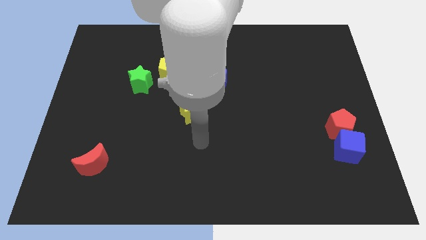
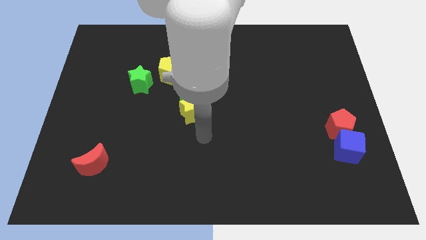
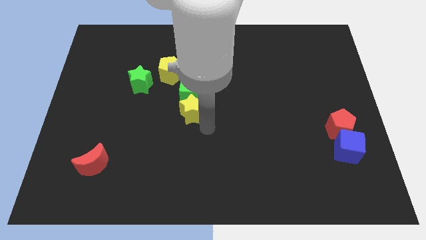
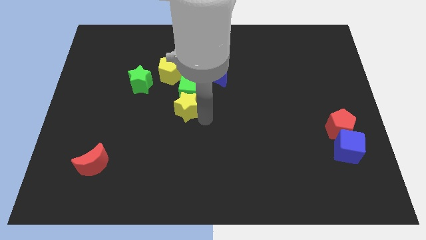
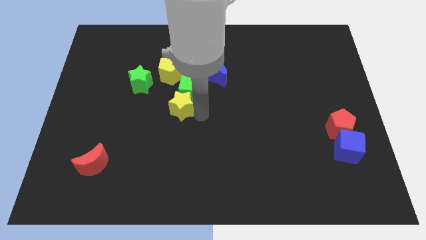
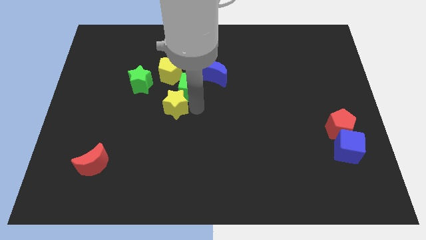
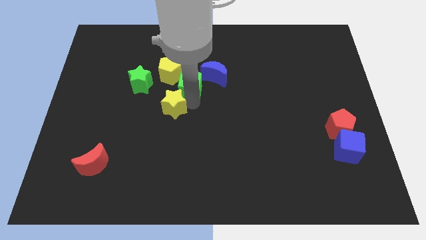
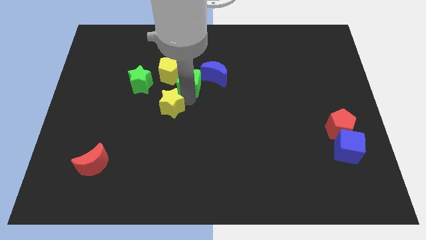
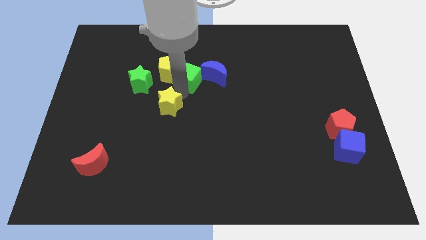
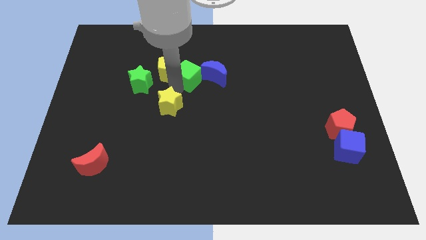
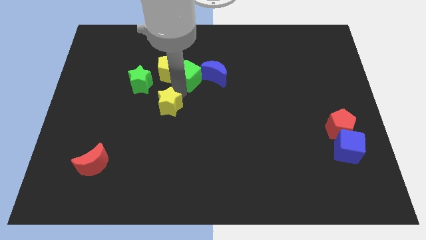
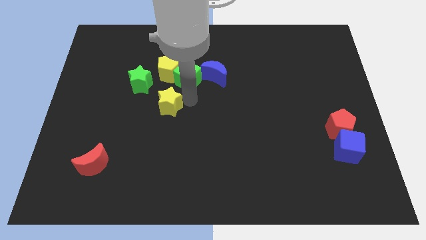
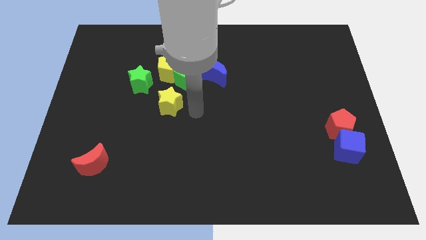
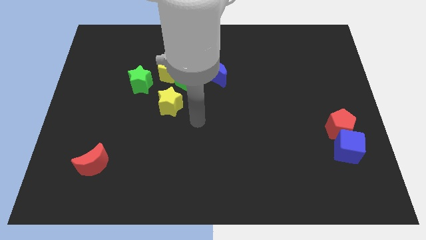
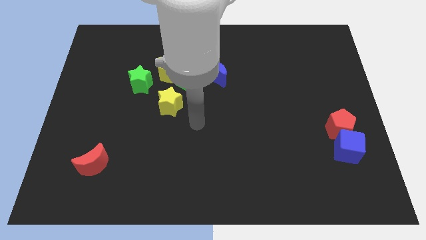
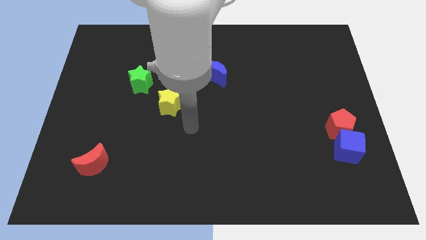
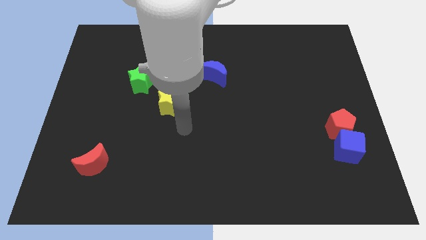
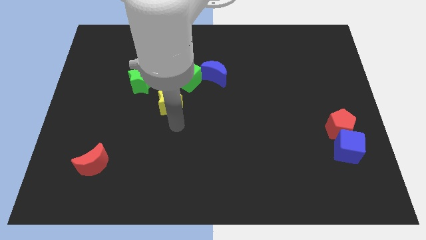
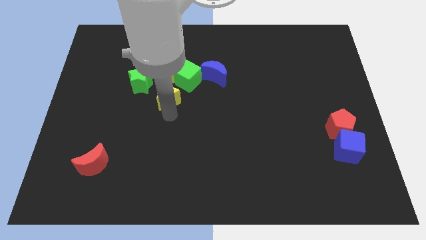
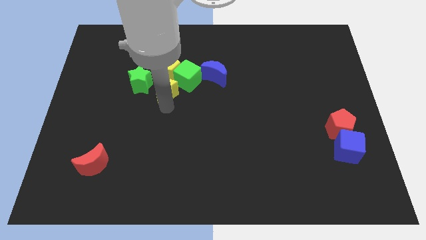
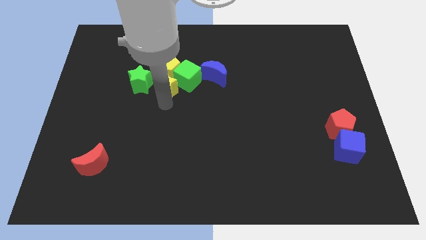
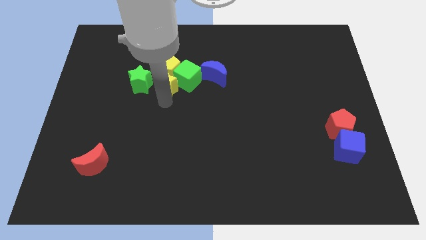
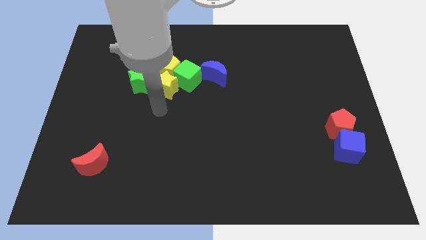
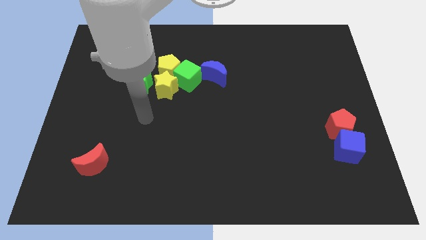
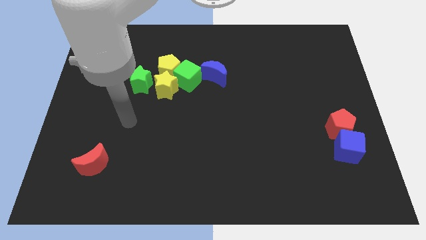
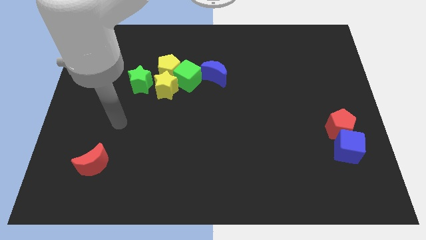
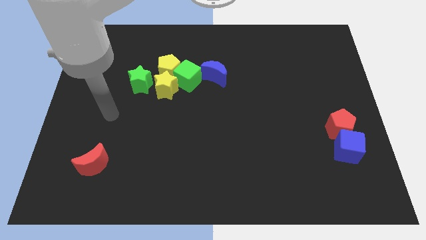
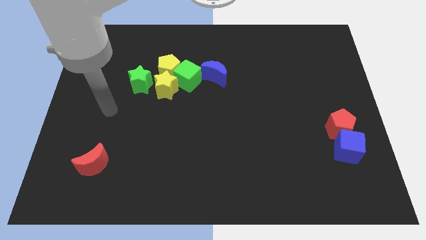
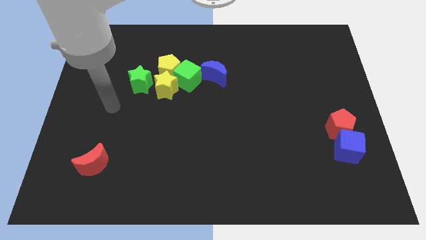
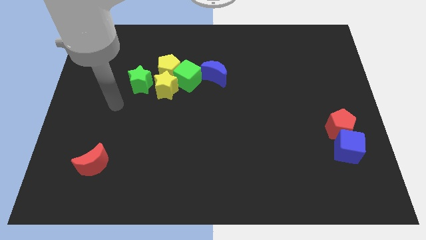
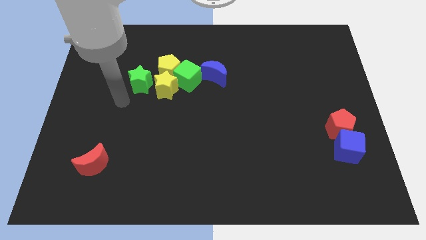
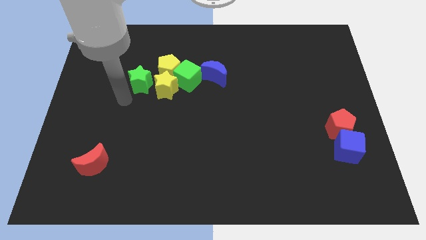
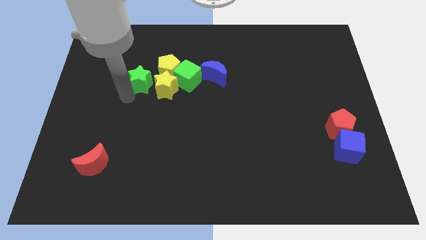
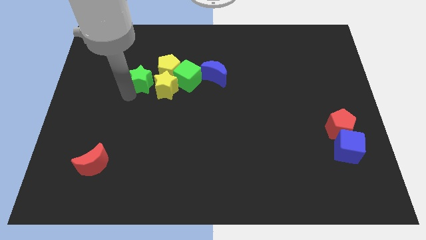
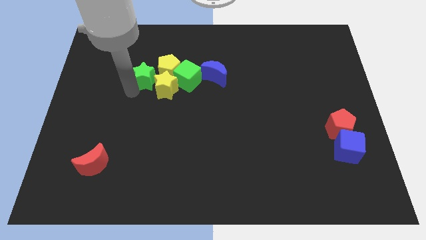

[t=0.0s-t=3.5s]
push the yellow star close to the yellow pentagon

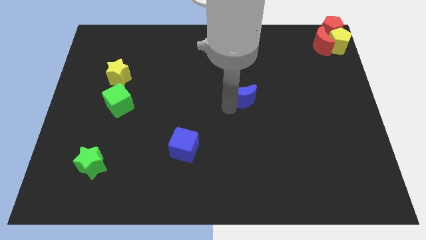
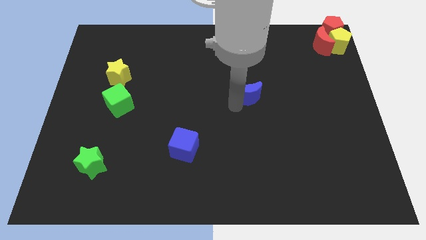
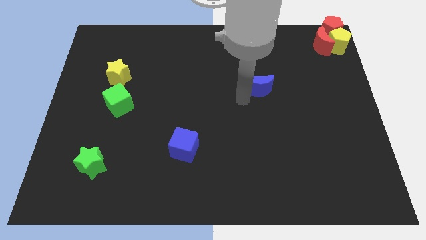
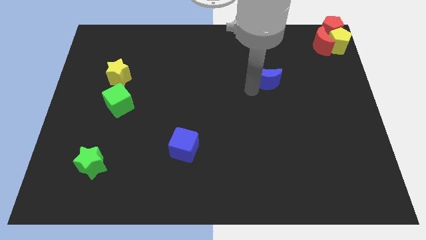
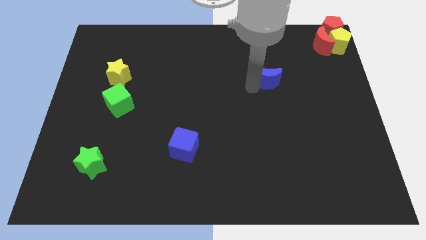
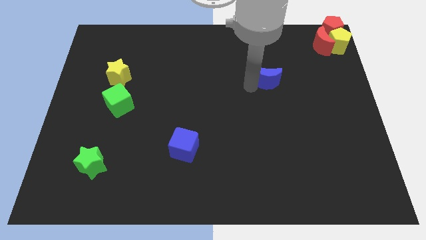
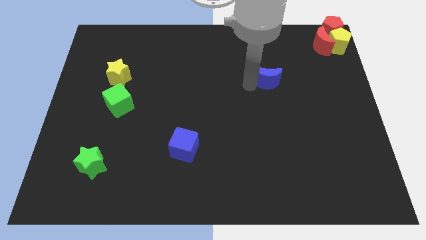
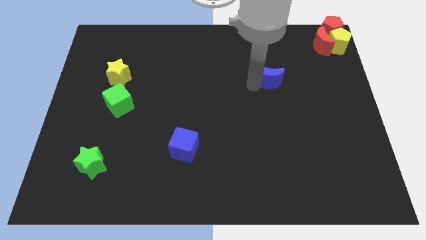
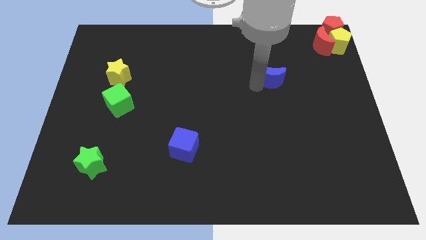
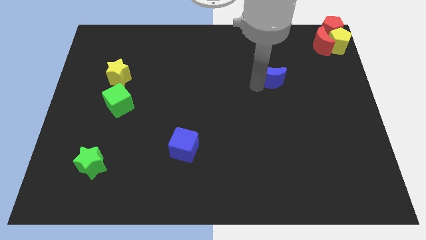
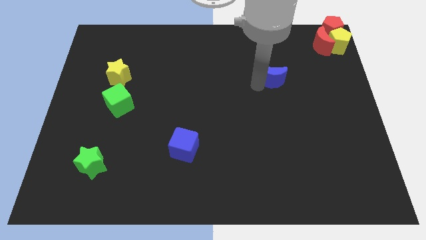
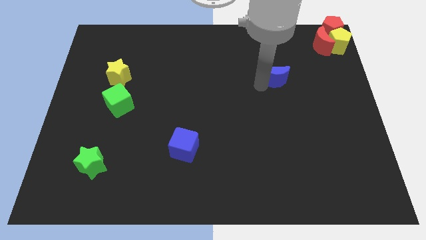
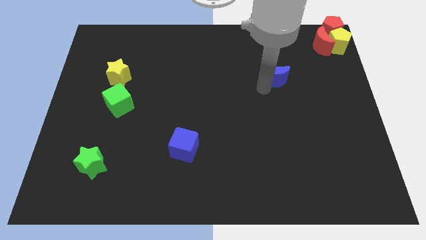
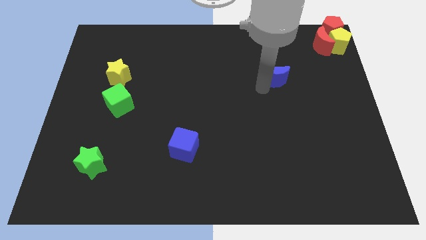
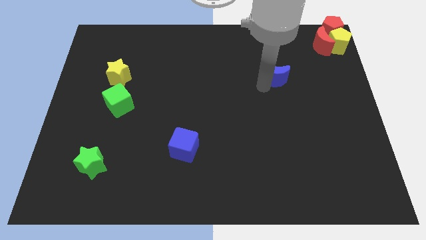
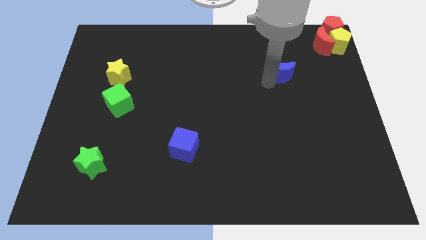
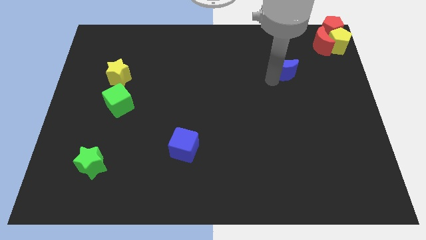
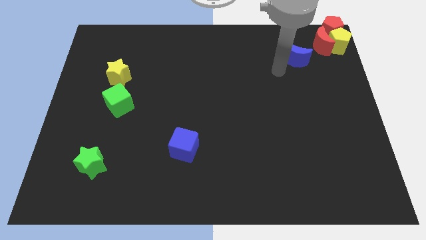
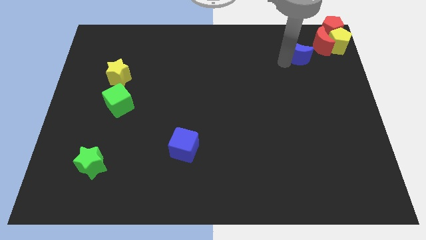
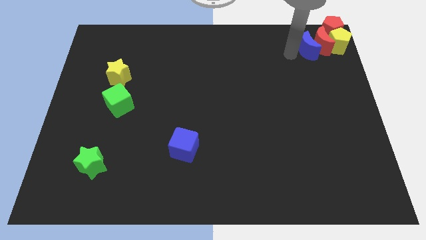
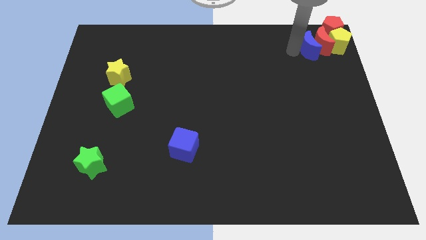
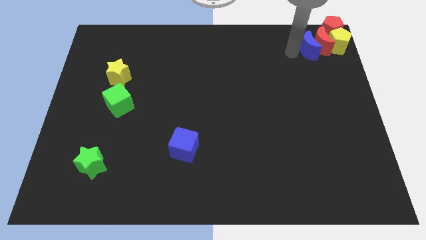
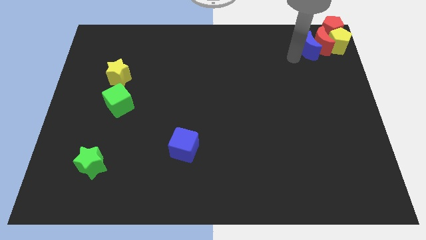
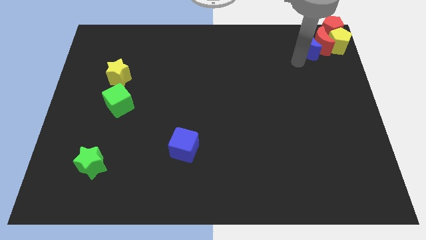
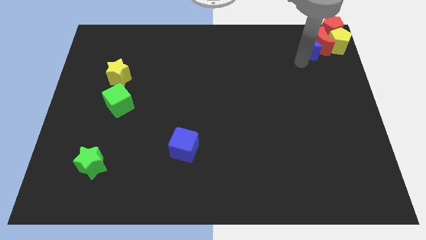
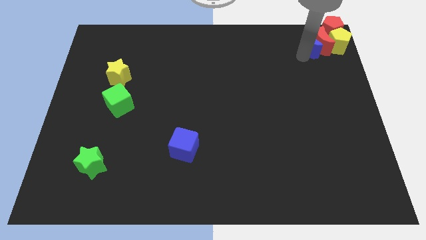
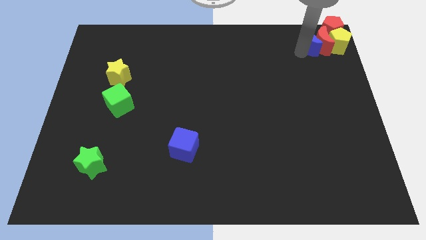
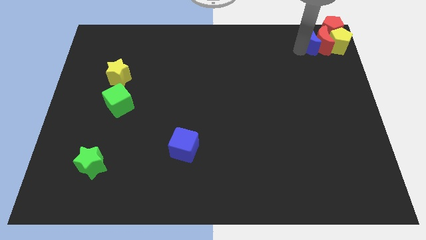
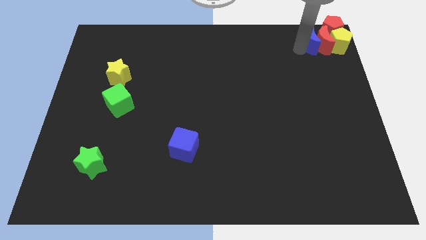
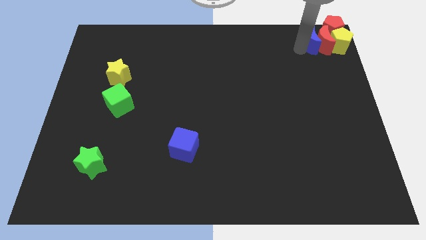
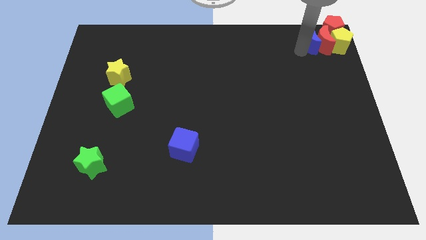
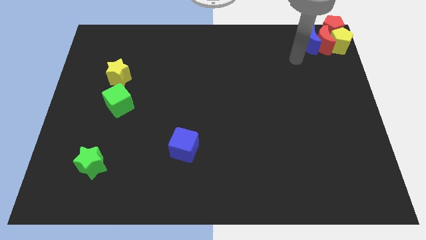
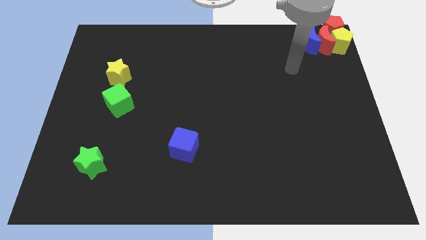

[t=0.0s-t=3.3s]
place the blue moon into the red moon

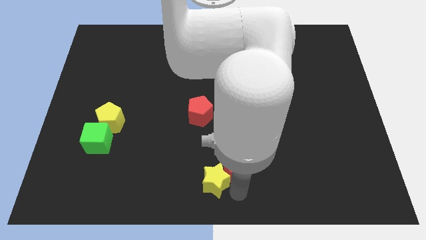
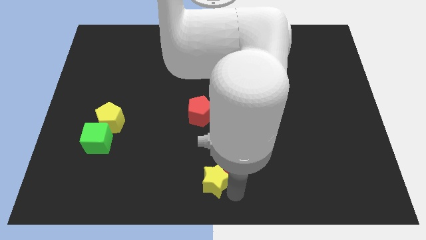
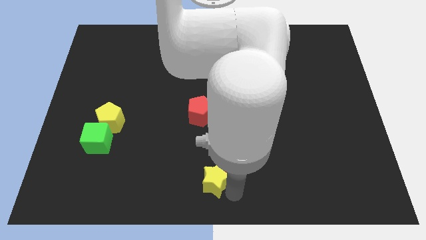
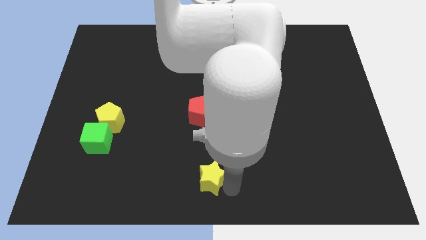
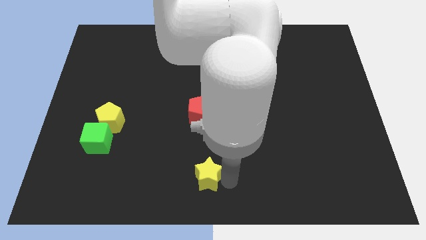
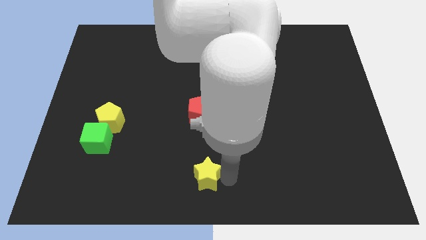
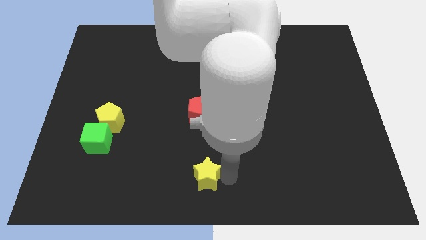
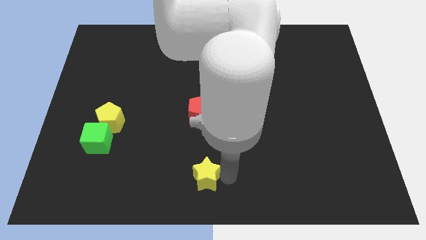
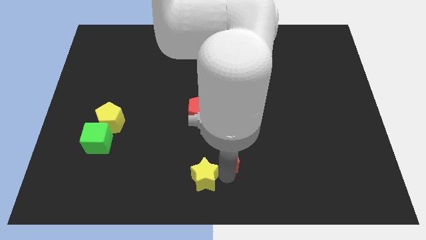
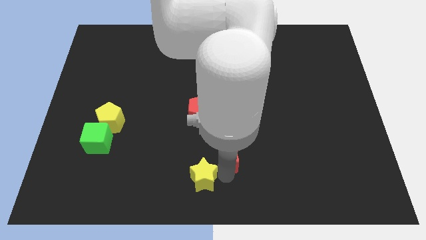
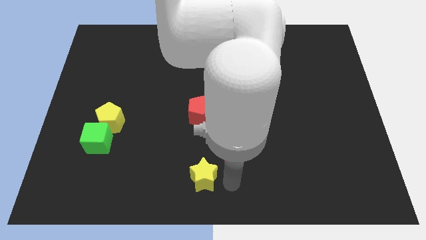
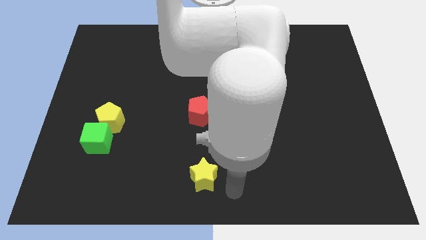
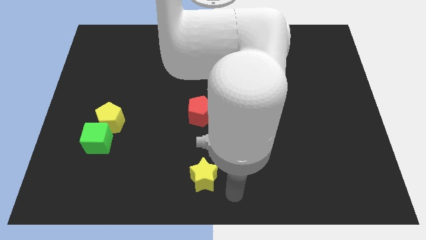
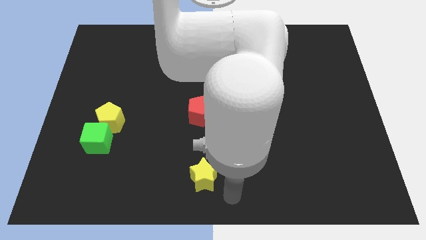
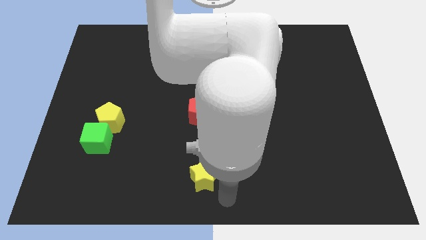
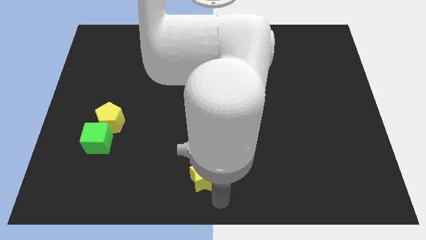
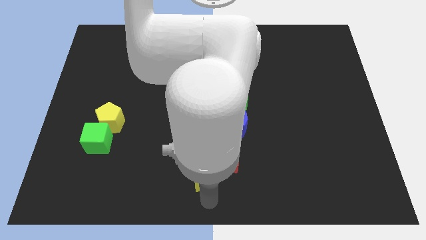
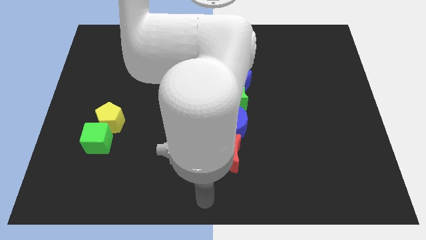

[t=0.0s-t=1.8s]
separate the yellow star from the red crescent

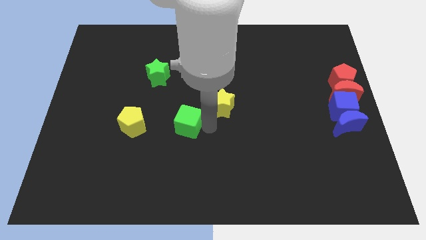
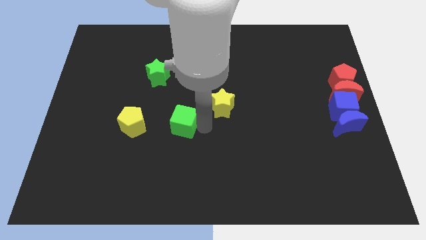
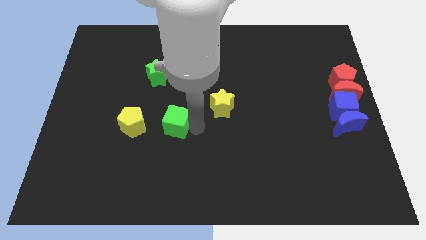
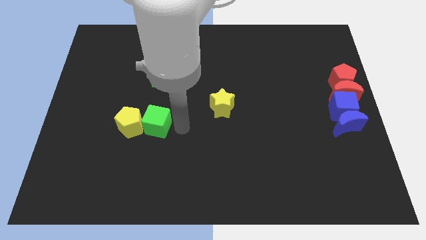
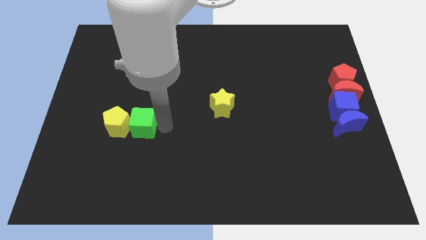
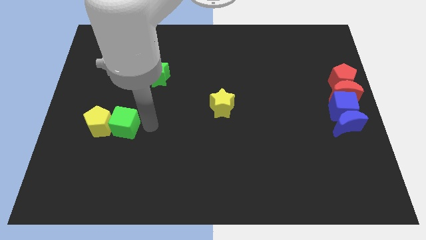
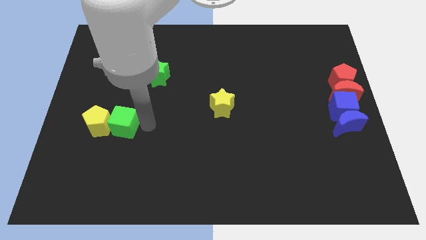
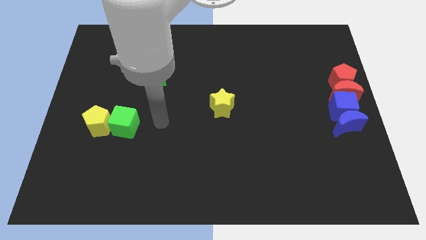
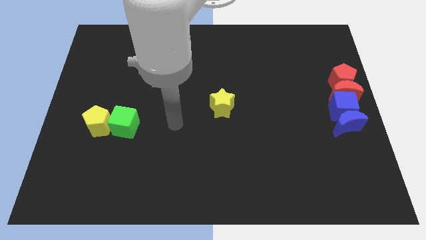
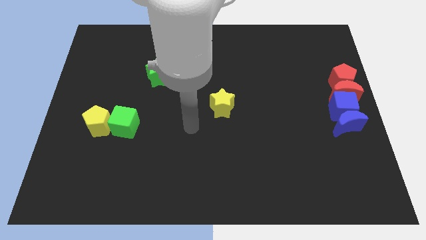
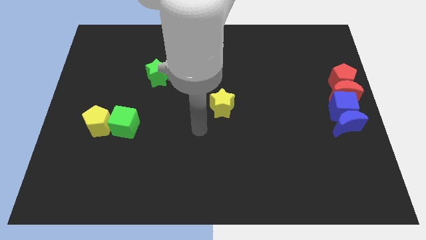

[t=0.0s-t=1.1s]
push the green cube to the left of the yellow pentagon
